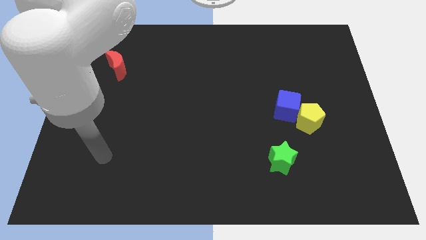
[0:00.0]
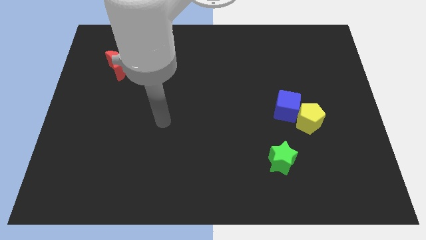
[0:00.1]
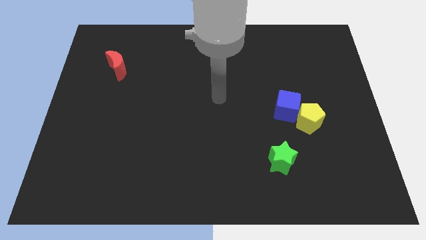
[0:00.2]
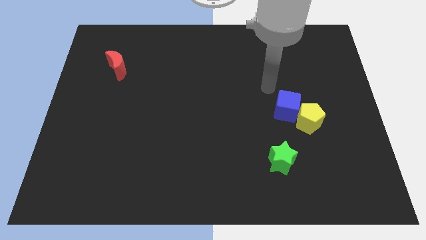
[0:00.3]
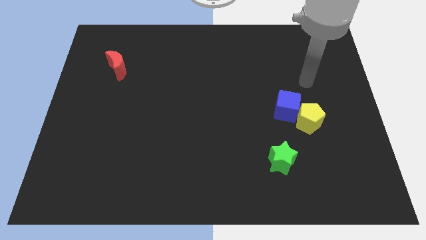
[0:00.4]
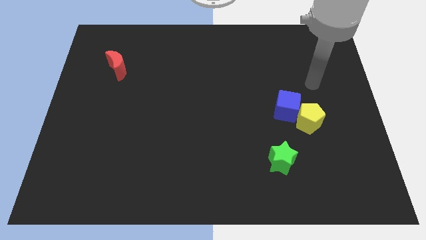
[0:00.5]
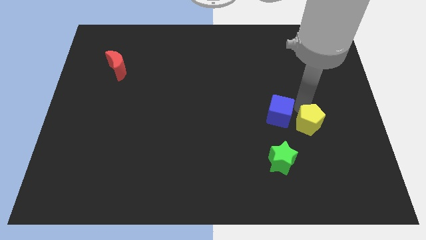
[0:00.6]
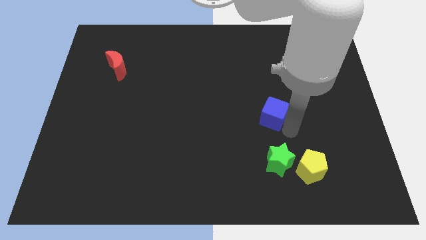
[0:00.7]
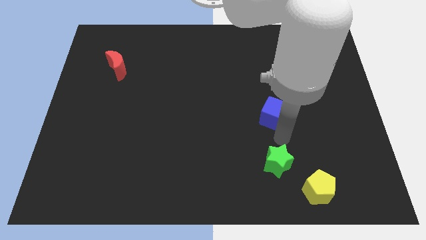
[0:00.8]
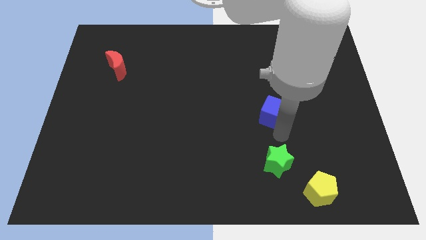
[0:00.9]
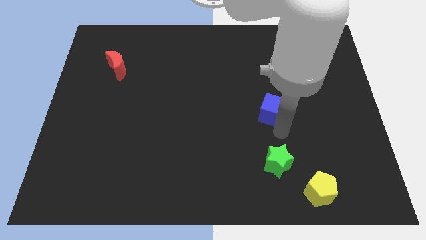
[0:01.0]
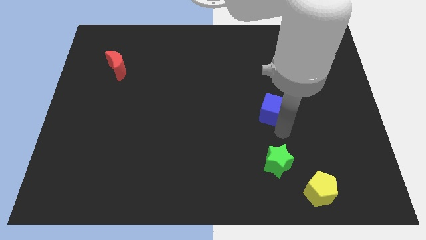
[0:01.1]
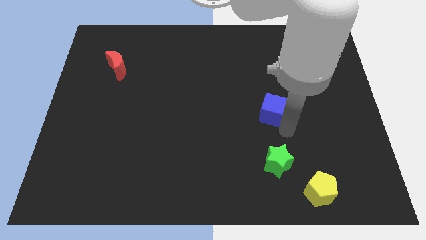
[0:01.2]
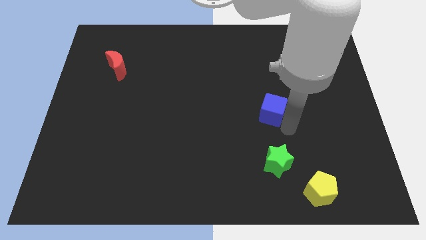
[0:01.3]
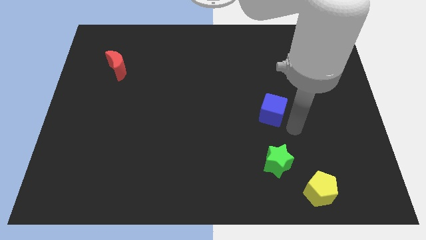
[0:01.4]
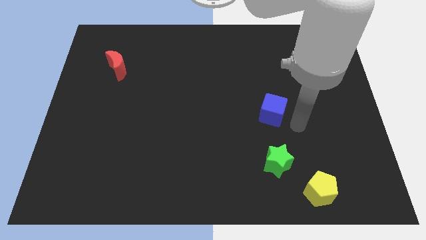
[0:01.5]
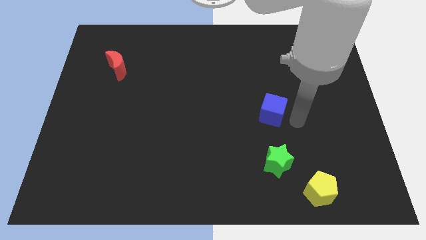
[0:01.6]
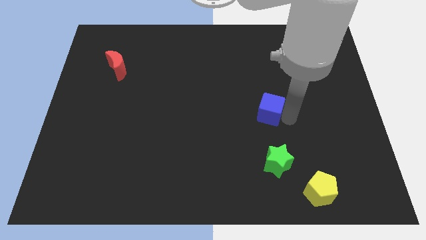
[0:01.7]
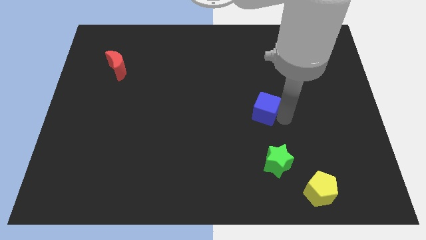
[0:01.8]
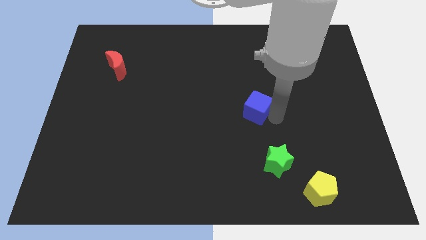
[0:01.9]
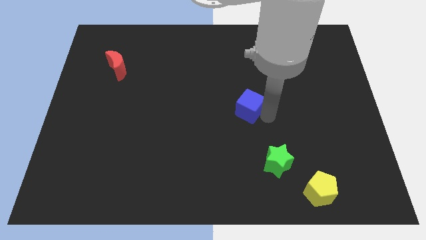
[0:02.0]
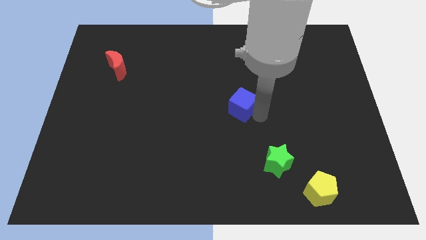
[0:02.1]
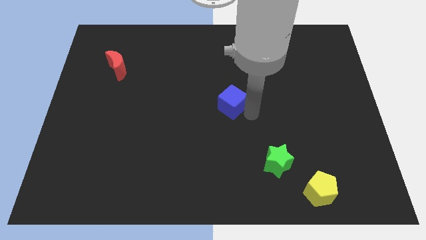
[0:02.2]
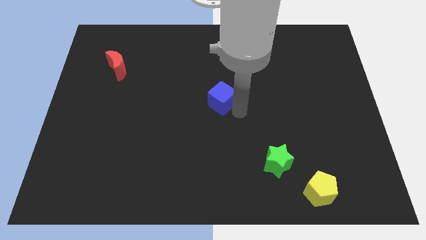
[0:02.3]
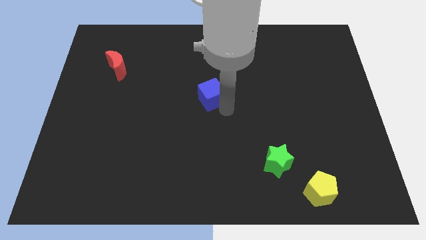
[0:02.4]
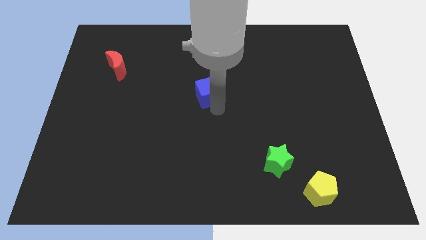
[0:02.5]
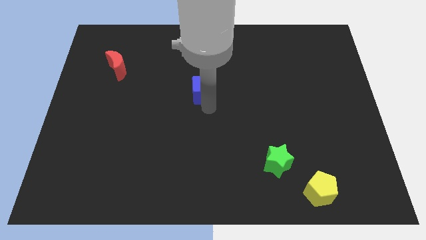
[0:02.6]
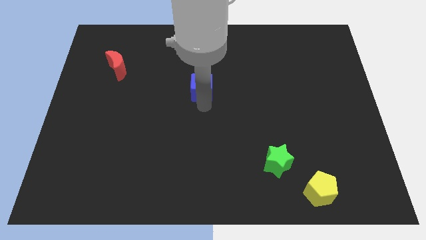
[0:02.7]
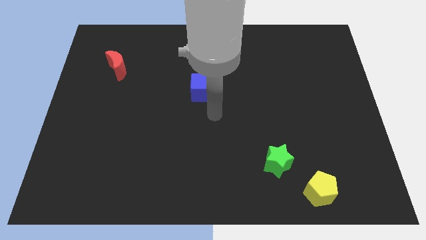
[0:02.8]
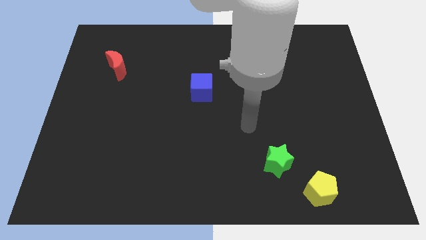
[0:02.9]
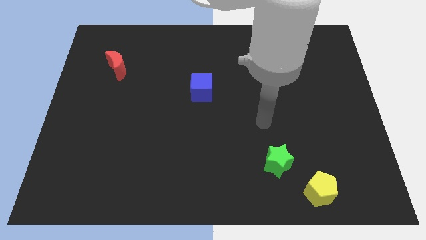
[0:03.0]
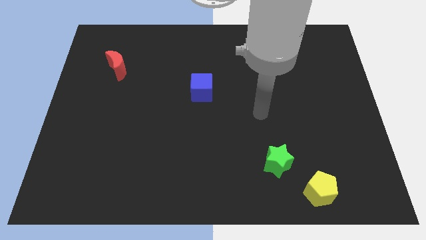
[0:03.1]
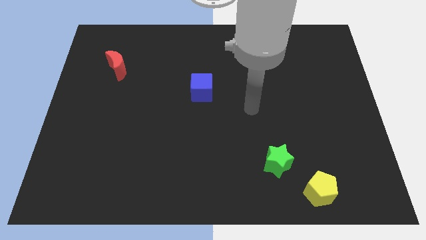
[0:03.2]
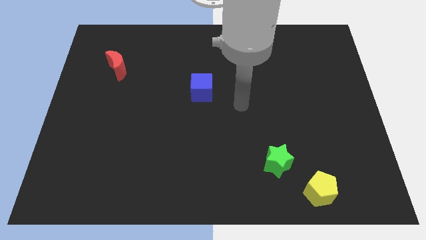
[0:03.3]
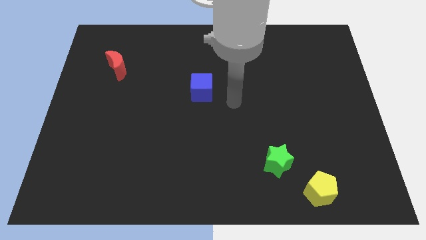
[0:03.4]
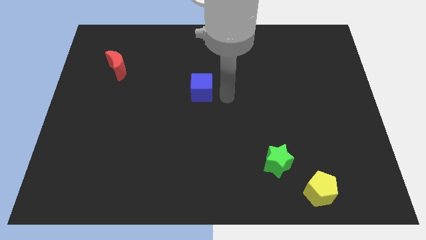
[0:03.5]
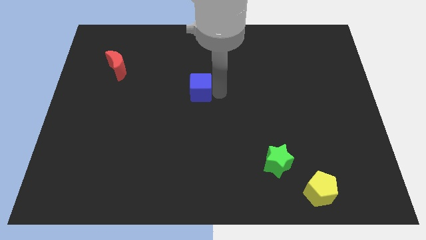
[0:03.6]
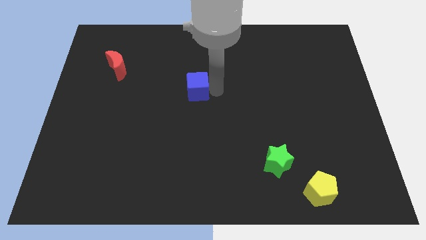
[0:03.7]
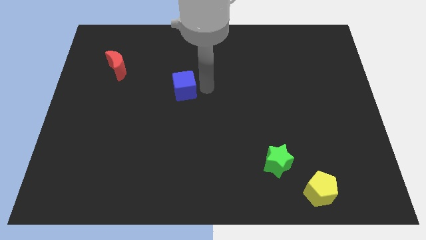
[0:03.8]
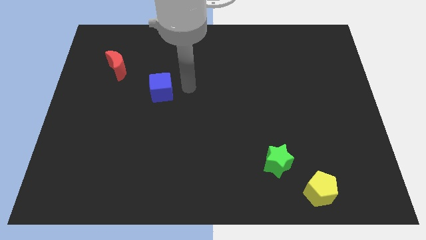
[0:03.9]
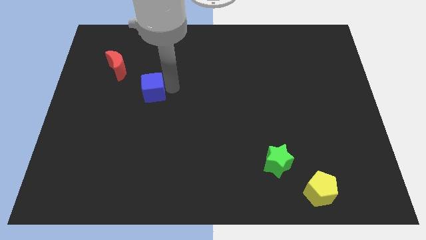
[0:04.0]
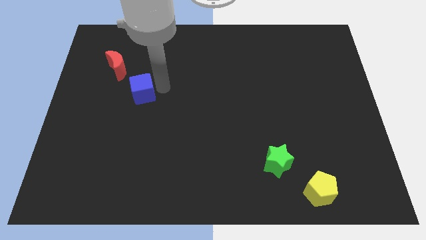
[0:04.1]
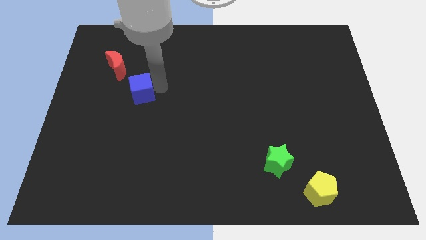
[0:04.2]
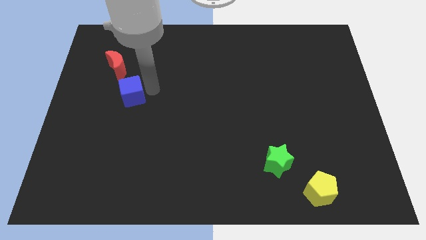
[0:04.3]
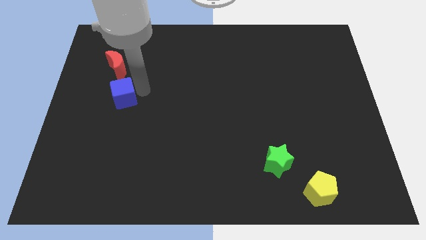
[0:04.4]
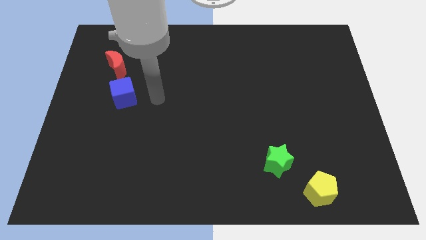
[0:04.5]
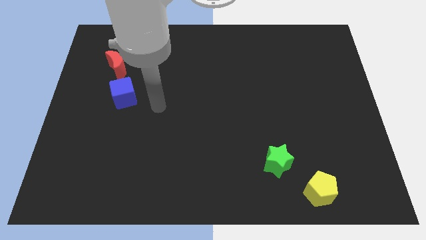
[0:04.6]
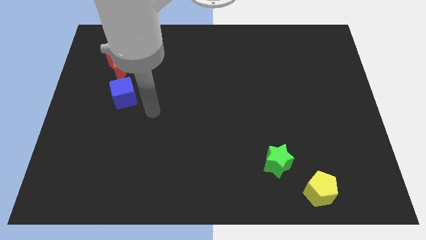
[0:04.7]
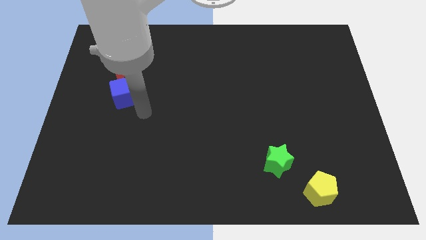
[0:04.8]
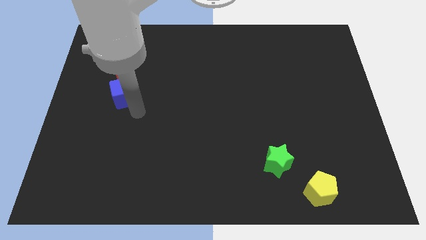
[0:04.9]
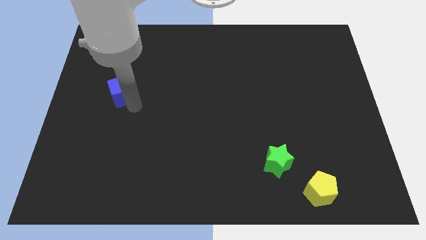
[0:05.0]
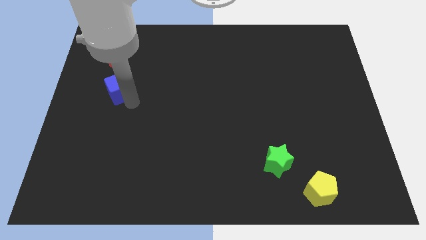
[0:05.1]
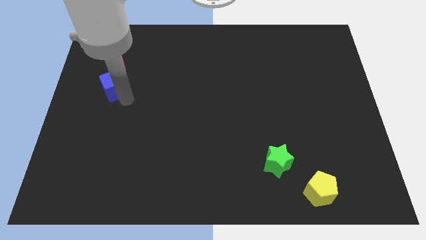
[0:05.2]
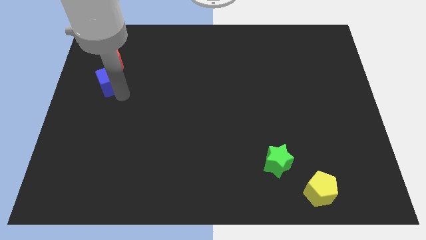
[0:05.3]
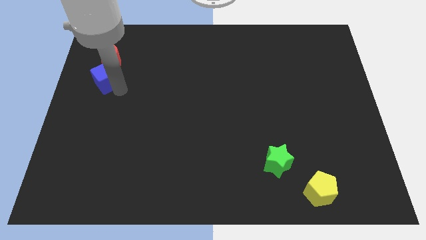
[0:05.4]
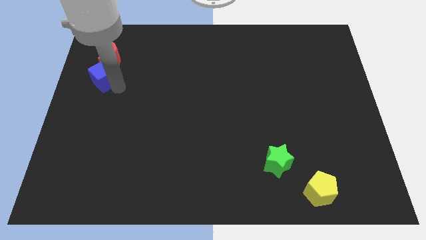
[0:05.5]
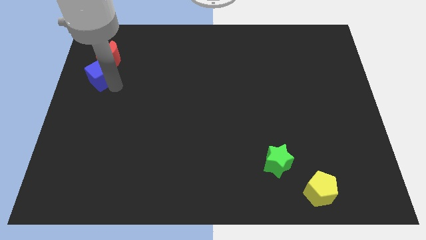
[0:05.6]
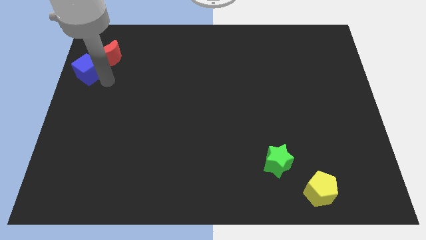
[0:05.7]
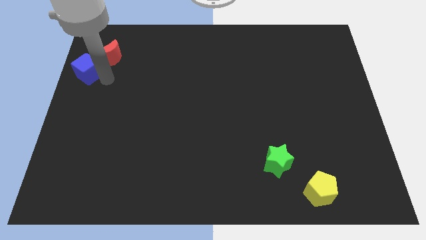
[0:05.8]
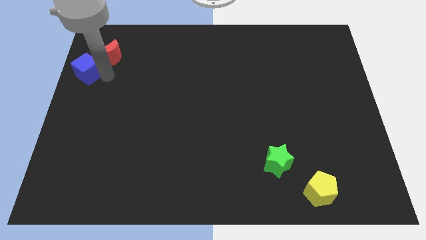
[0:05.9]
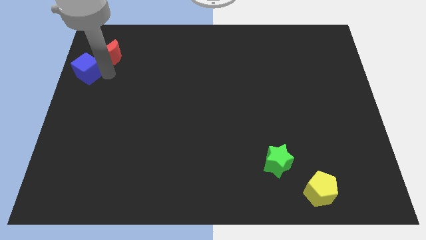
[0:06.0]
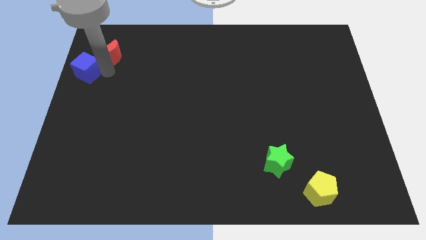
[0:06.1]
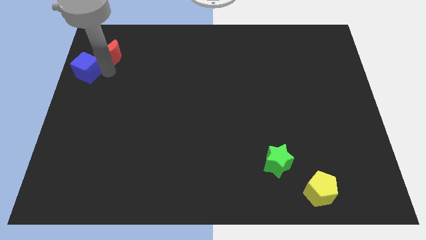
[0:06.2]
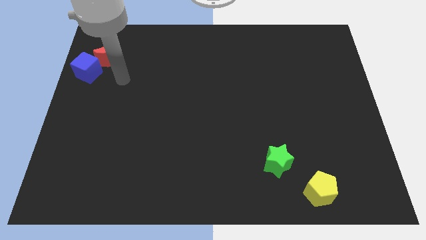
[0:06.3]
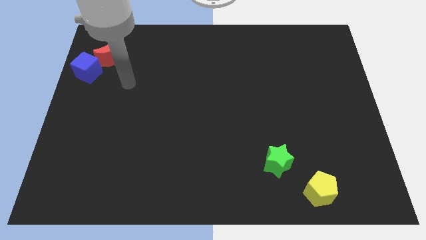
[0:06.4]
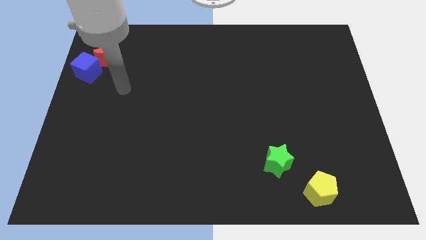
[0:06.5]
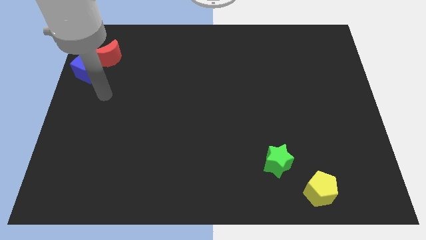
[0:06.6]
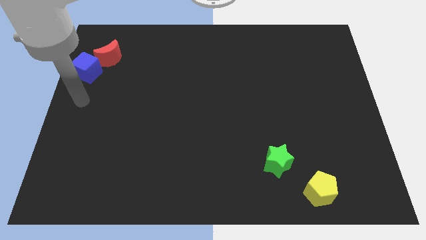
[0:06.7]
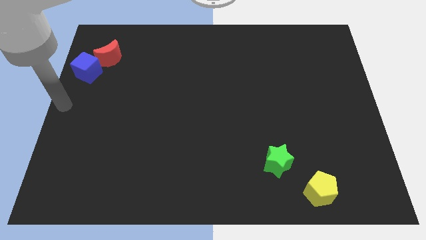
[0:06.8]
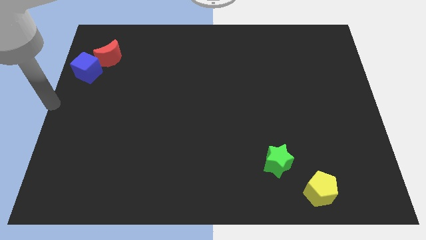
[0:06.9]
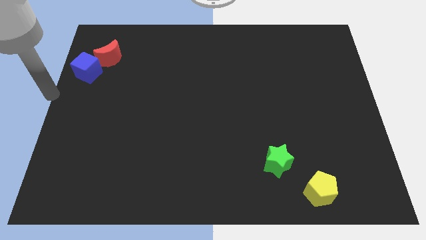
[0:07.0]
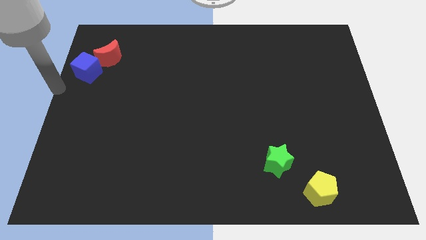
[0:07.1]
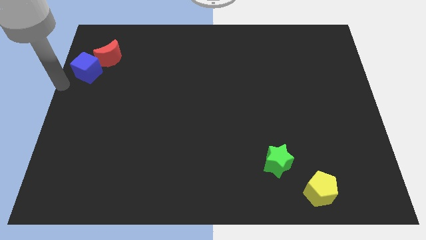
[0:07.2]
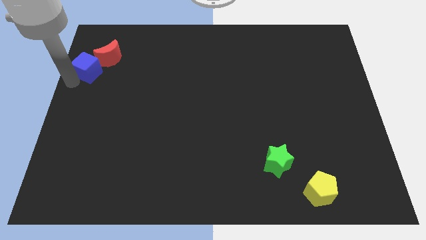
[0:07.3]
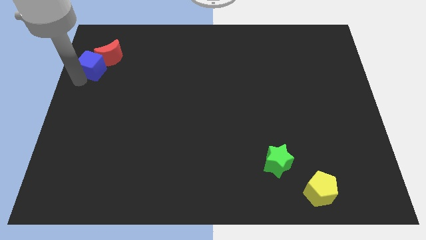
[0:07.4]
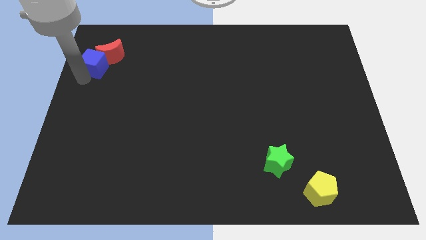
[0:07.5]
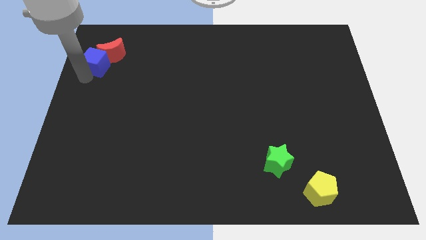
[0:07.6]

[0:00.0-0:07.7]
put the blue cube close to the red block

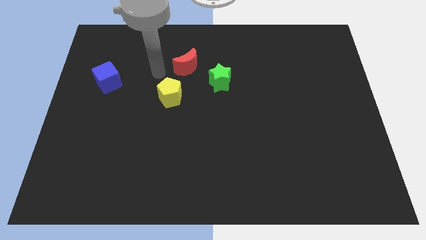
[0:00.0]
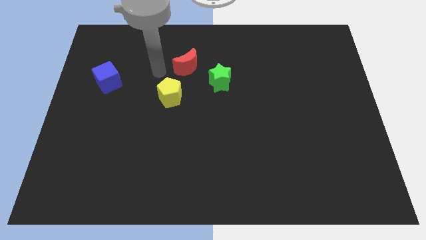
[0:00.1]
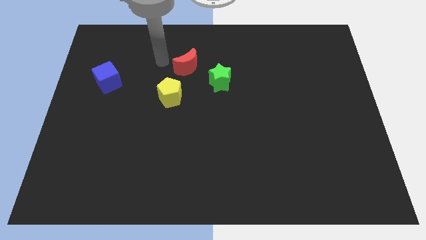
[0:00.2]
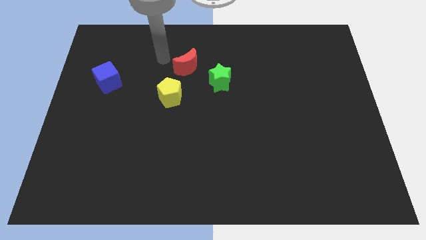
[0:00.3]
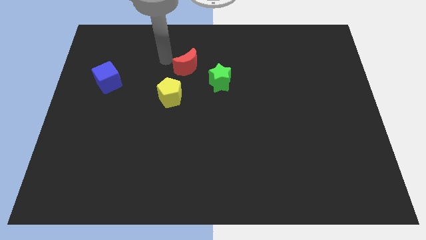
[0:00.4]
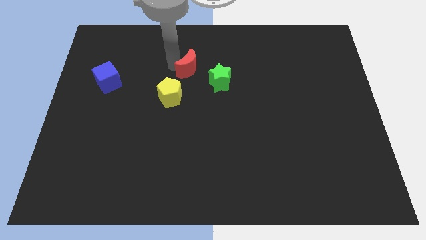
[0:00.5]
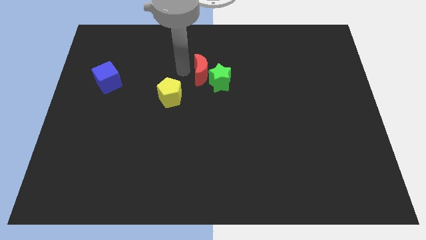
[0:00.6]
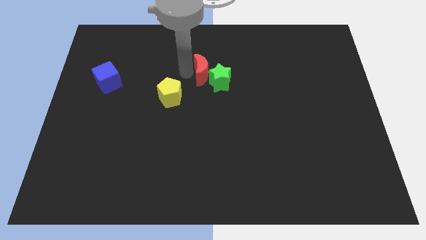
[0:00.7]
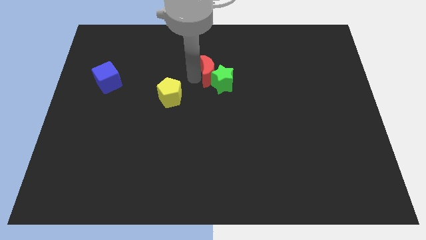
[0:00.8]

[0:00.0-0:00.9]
move the moon to the star
